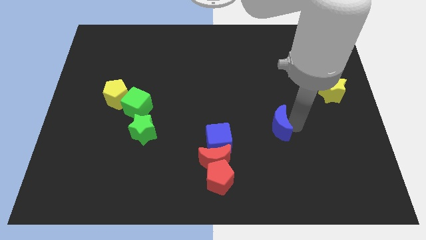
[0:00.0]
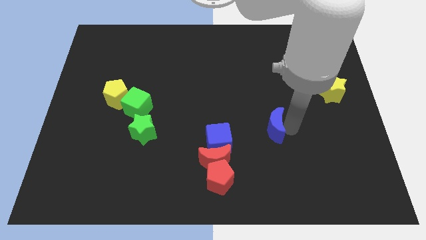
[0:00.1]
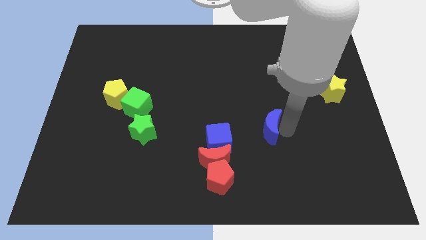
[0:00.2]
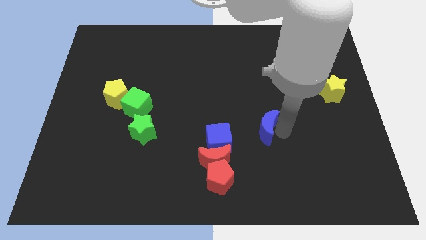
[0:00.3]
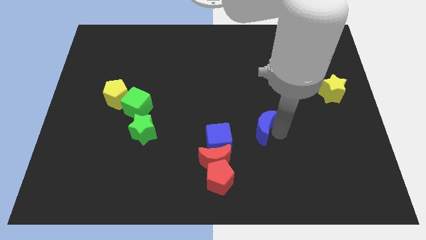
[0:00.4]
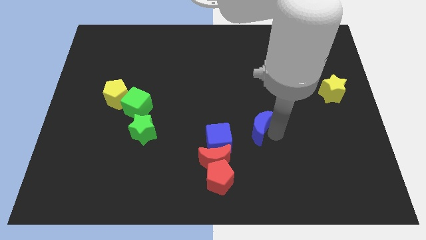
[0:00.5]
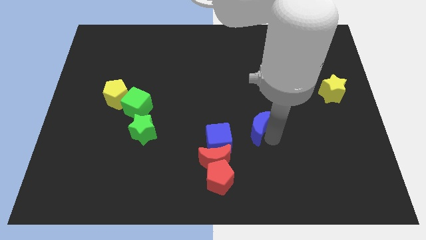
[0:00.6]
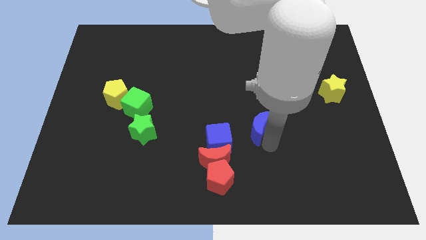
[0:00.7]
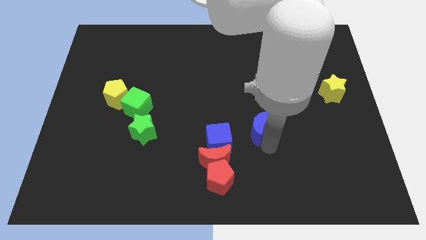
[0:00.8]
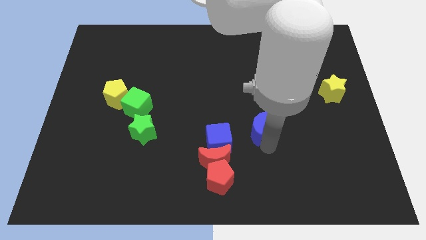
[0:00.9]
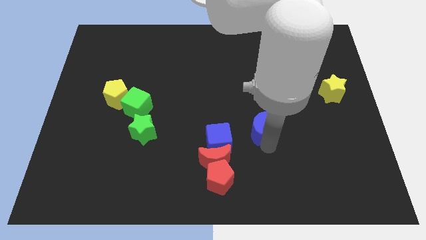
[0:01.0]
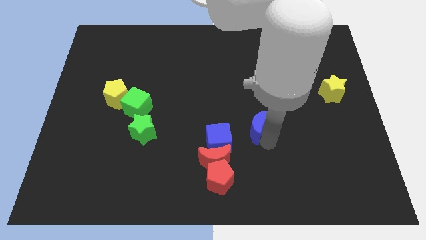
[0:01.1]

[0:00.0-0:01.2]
move the blue crescent to the right of the blue cube

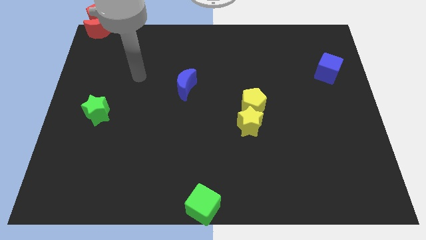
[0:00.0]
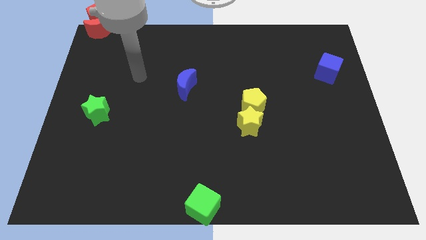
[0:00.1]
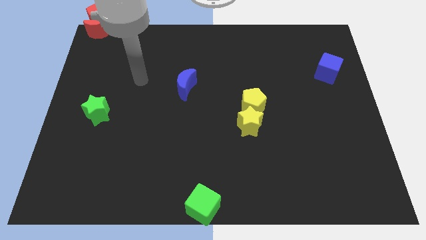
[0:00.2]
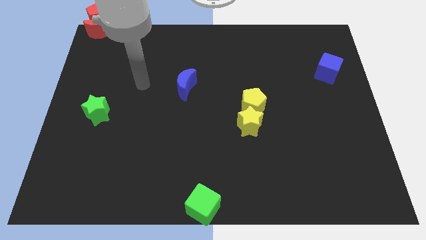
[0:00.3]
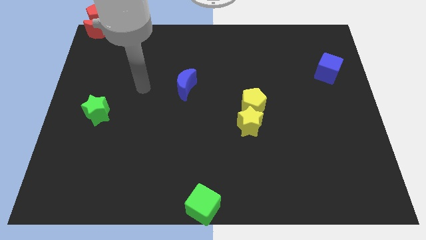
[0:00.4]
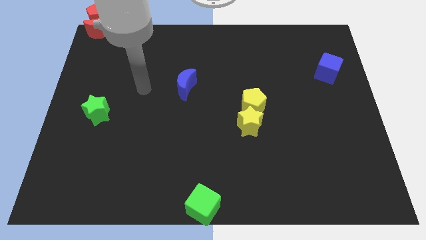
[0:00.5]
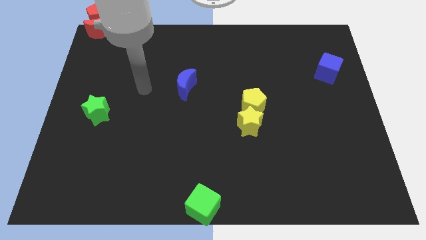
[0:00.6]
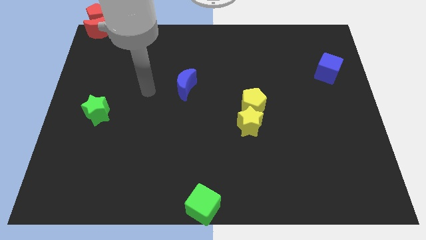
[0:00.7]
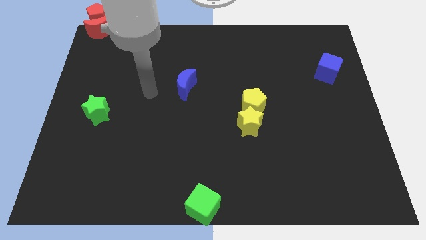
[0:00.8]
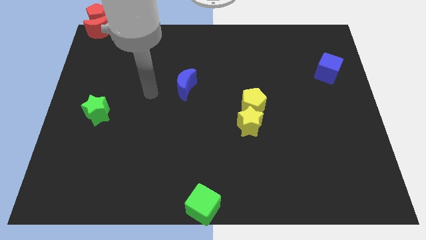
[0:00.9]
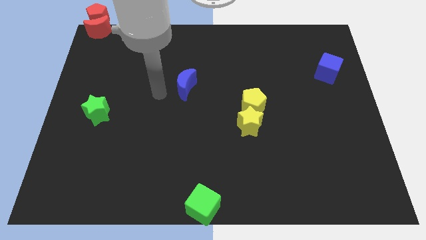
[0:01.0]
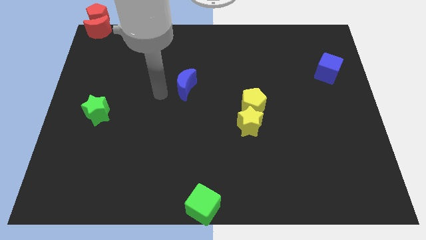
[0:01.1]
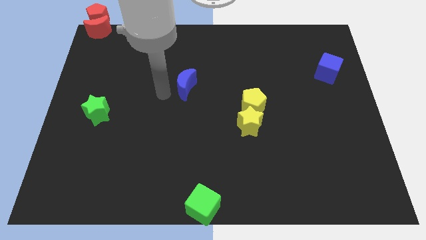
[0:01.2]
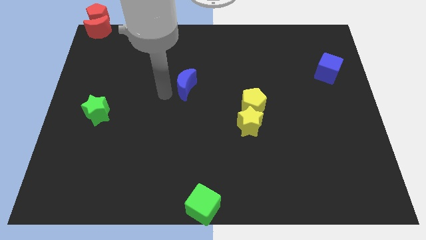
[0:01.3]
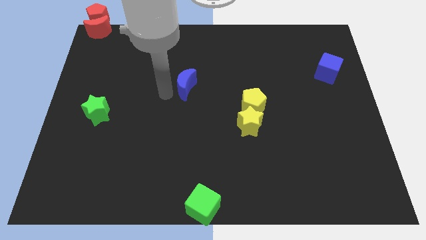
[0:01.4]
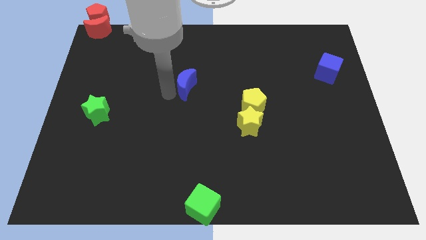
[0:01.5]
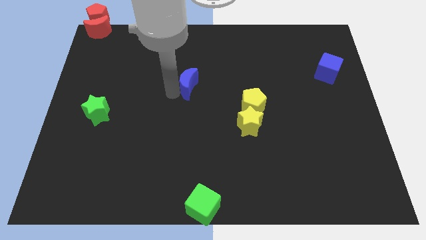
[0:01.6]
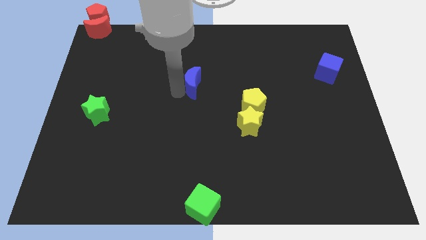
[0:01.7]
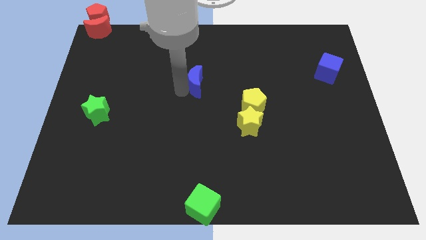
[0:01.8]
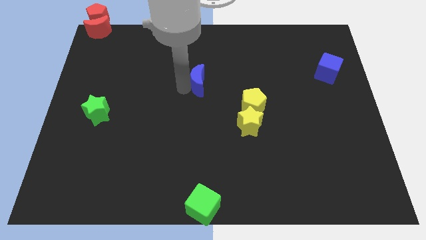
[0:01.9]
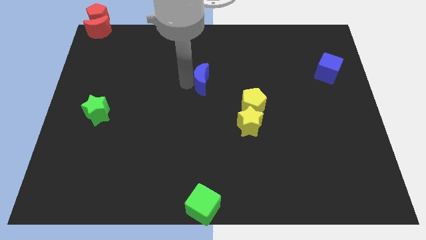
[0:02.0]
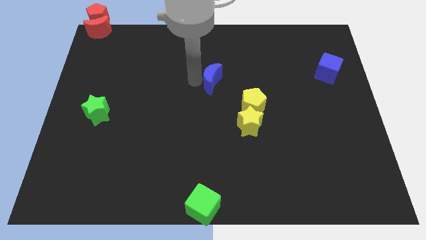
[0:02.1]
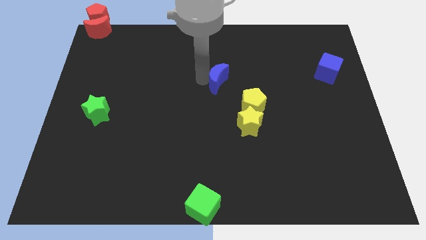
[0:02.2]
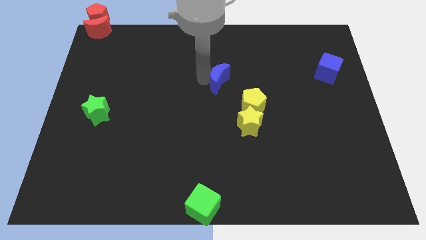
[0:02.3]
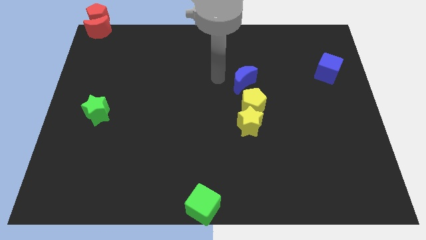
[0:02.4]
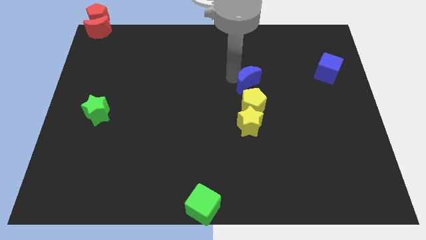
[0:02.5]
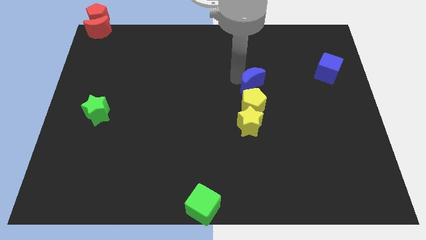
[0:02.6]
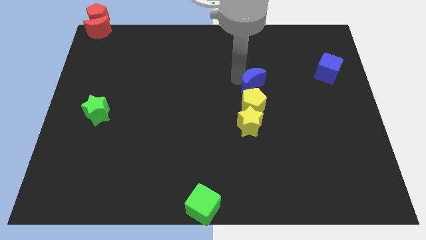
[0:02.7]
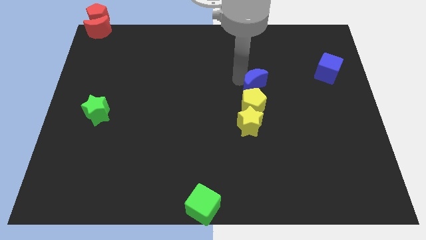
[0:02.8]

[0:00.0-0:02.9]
move the blue moon and place it on top of yellow pentagon

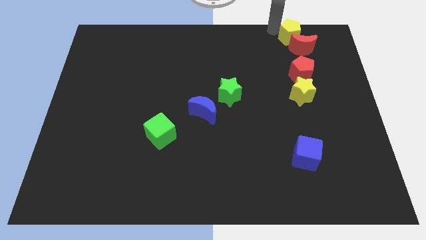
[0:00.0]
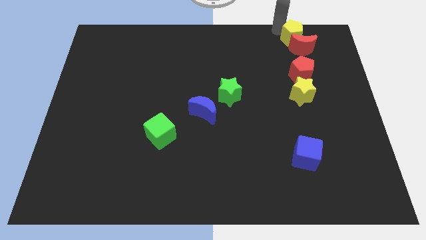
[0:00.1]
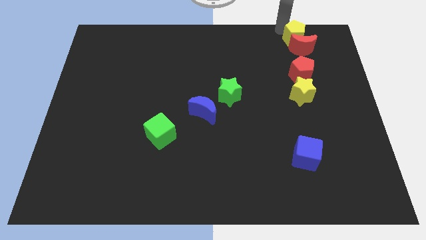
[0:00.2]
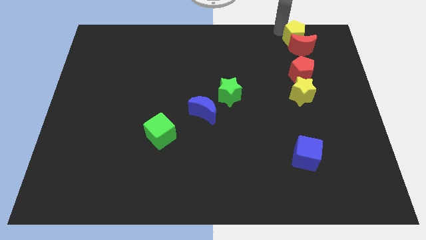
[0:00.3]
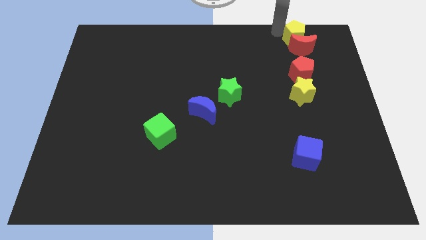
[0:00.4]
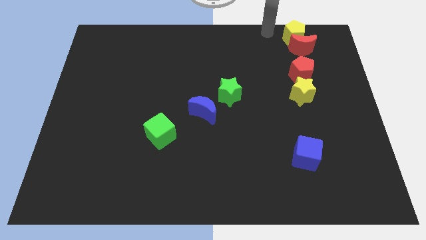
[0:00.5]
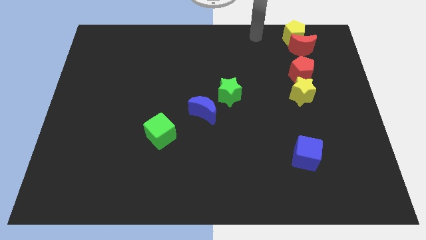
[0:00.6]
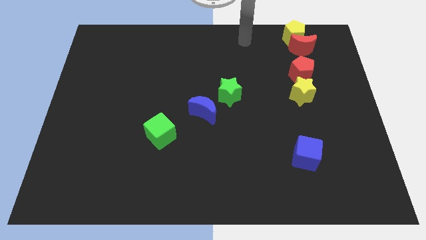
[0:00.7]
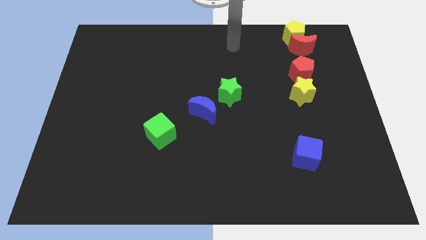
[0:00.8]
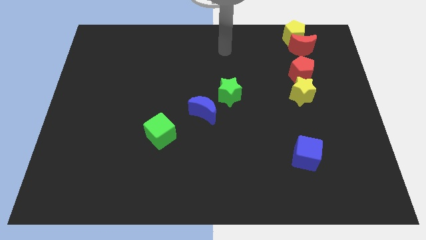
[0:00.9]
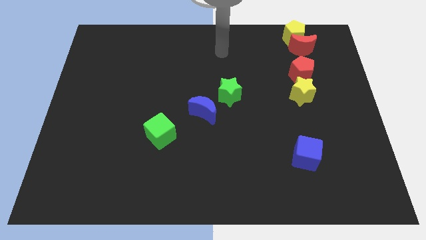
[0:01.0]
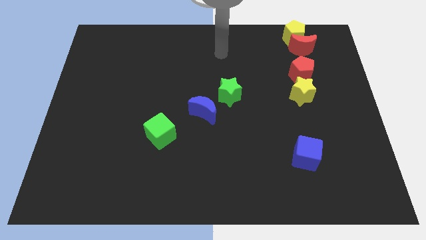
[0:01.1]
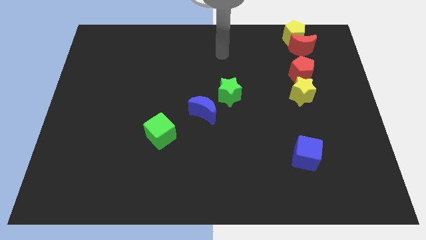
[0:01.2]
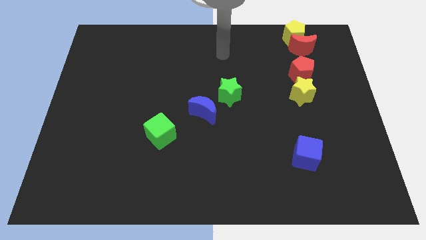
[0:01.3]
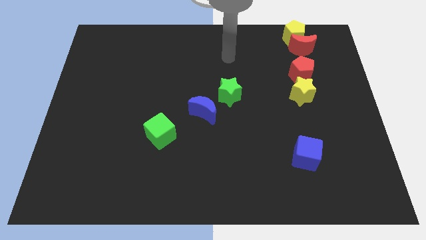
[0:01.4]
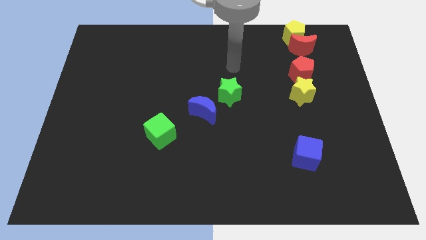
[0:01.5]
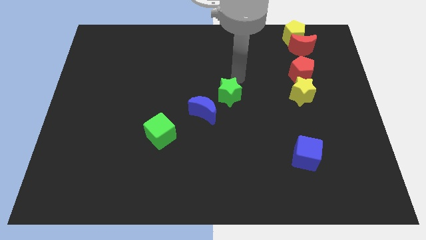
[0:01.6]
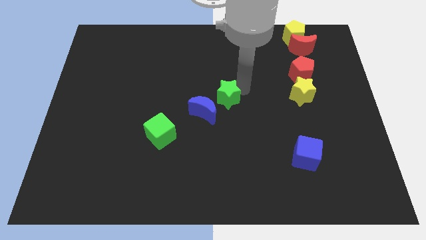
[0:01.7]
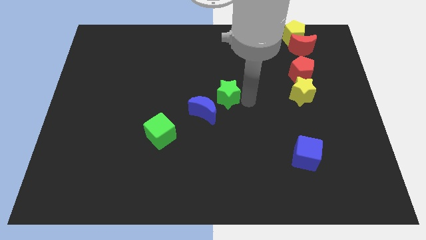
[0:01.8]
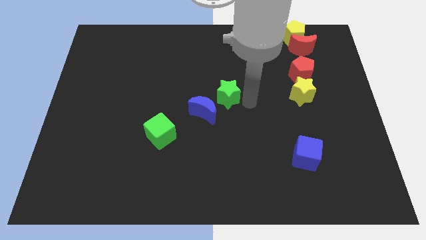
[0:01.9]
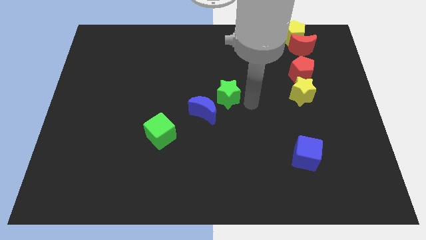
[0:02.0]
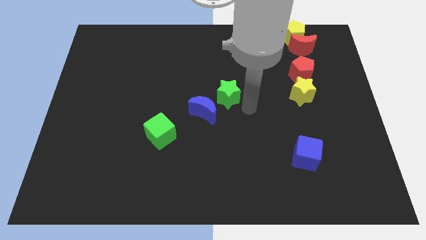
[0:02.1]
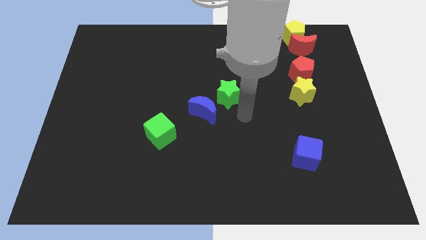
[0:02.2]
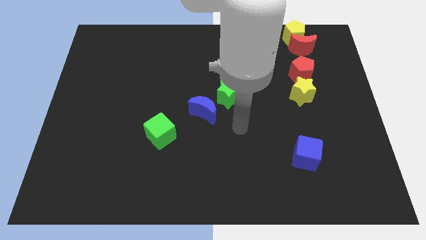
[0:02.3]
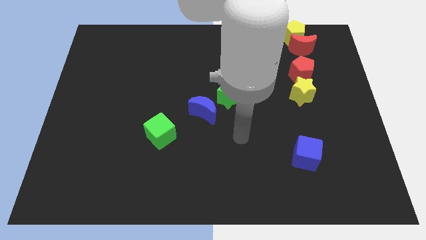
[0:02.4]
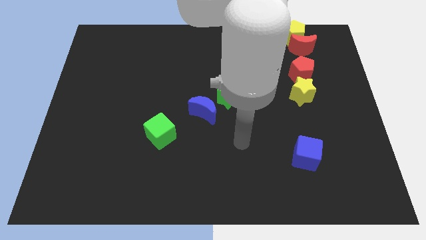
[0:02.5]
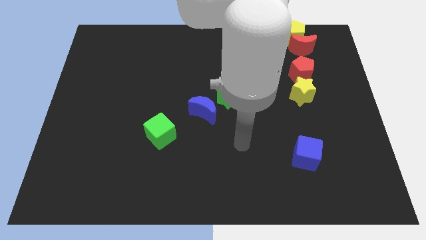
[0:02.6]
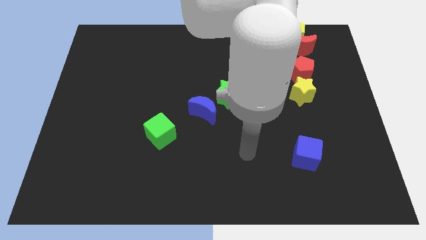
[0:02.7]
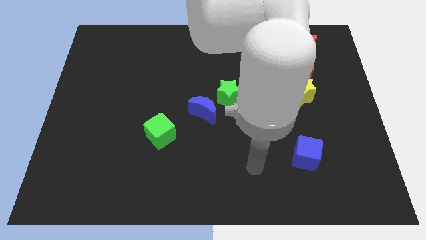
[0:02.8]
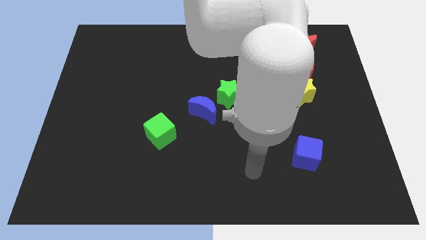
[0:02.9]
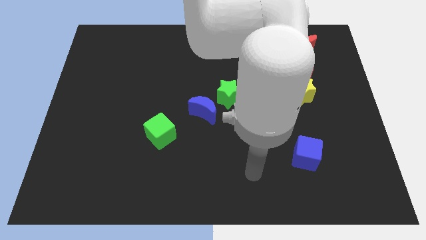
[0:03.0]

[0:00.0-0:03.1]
slightly move the green star to bottom star

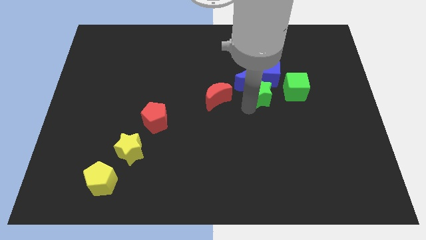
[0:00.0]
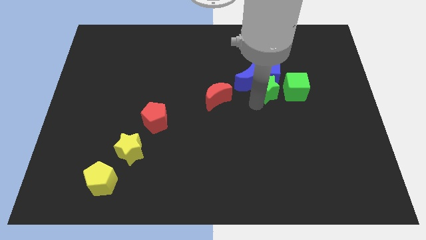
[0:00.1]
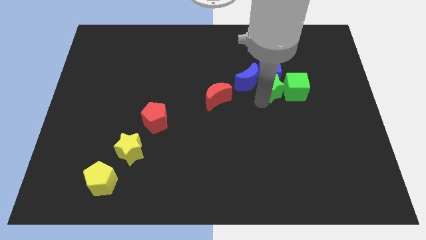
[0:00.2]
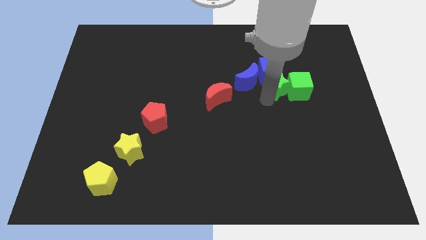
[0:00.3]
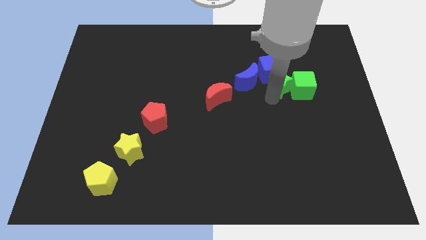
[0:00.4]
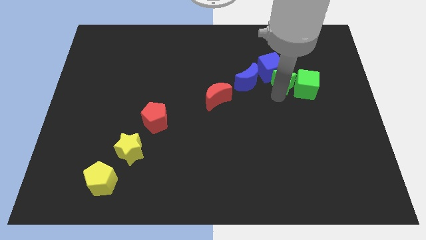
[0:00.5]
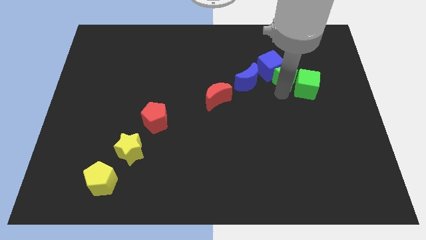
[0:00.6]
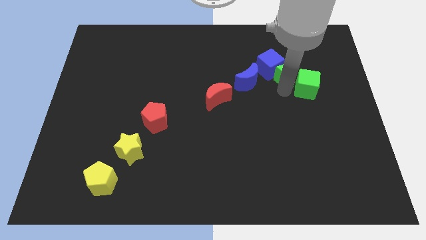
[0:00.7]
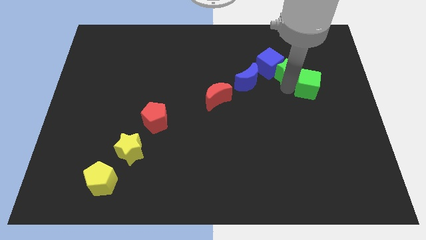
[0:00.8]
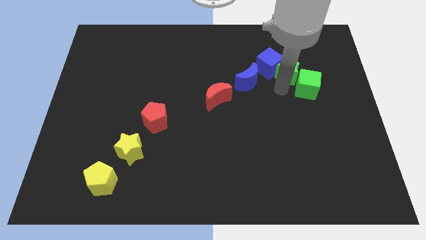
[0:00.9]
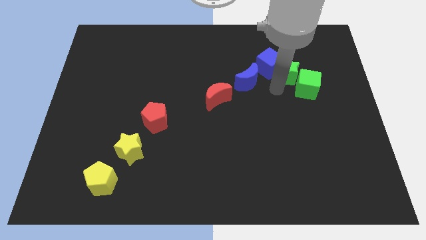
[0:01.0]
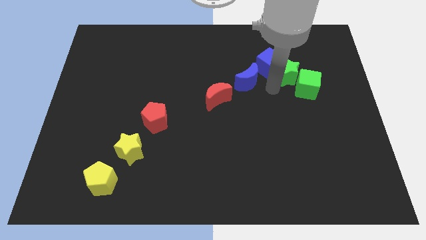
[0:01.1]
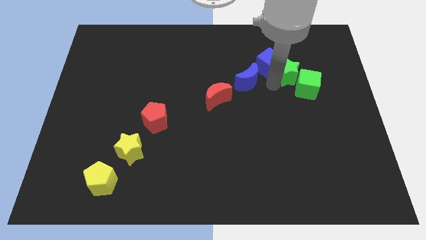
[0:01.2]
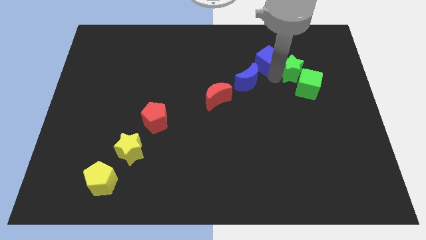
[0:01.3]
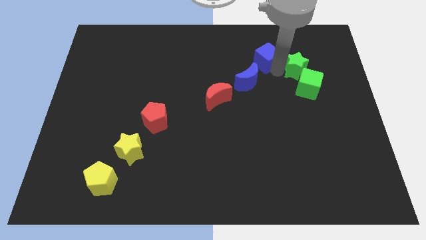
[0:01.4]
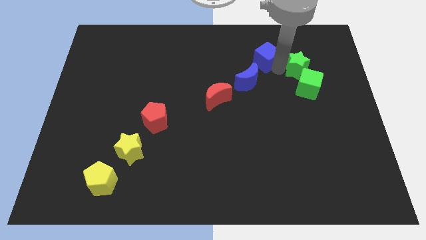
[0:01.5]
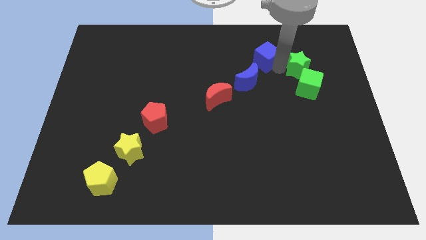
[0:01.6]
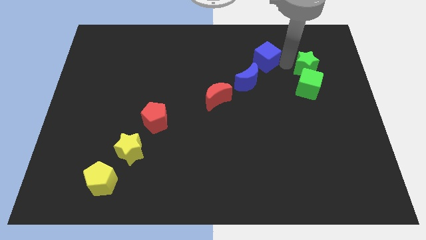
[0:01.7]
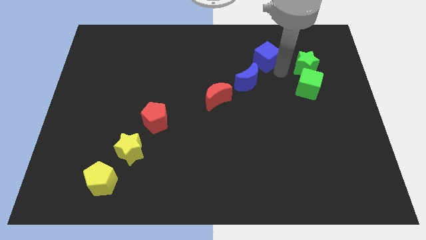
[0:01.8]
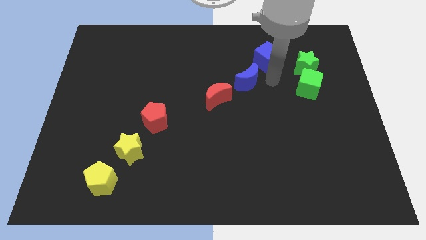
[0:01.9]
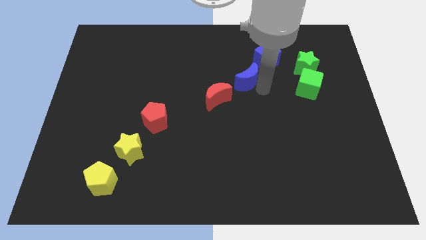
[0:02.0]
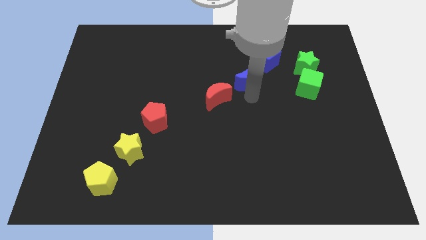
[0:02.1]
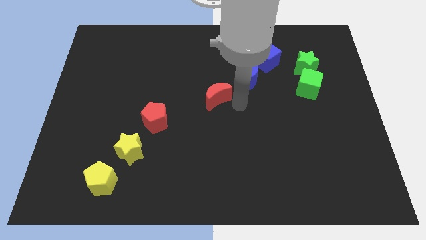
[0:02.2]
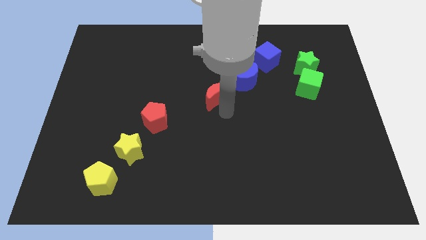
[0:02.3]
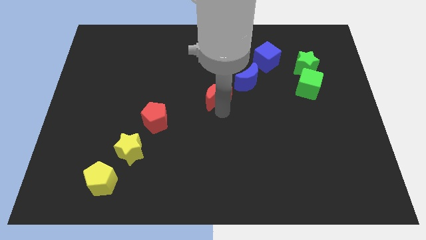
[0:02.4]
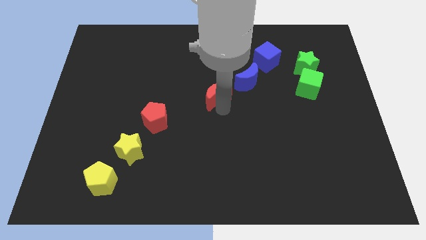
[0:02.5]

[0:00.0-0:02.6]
separate the green blocks from blue blocks
